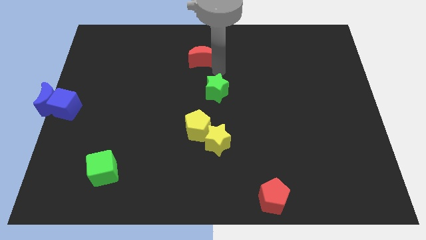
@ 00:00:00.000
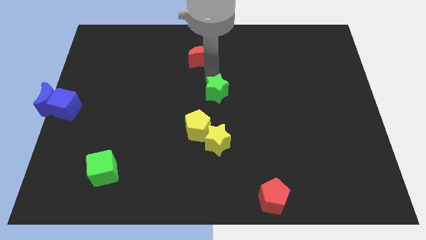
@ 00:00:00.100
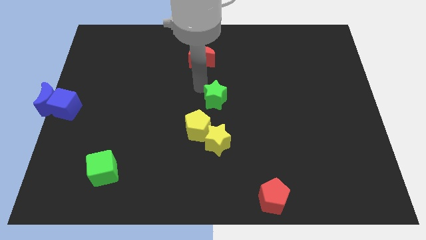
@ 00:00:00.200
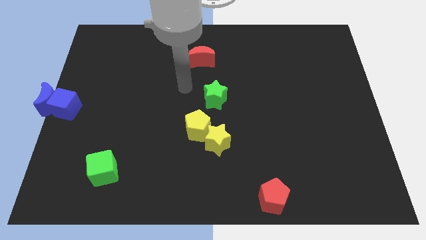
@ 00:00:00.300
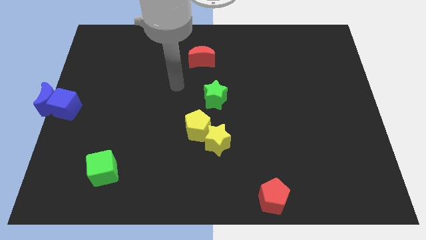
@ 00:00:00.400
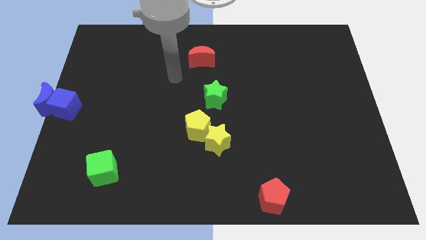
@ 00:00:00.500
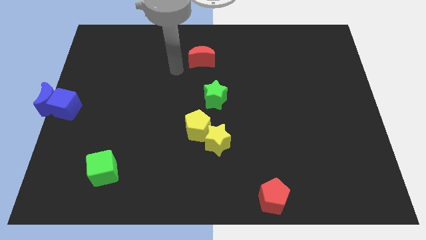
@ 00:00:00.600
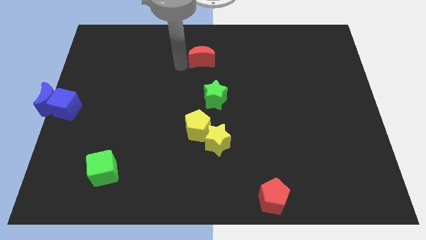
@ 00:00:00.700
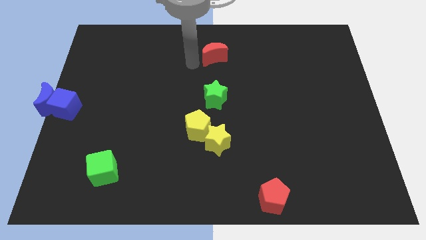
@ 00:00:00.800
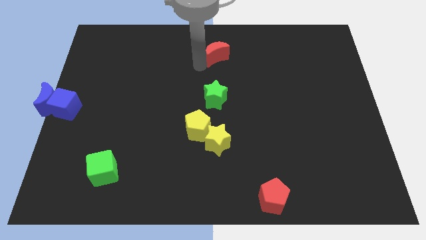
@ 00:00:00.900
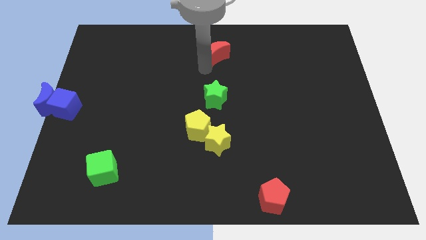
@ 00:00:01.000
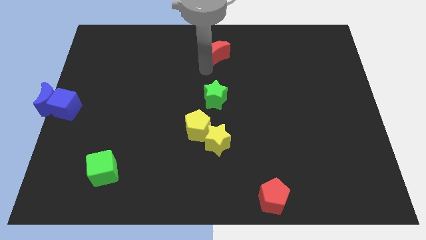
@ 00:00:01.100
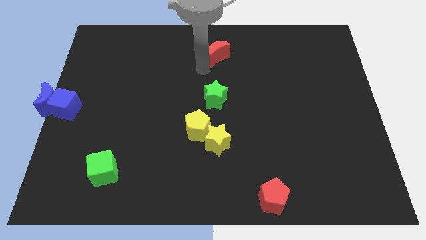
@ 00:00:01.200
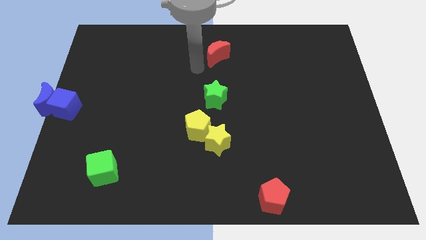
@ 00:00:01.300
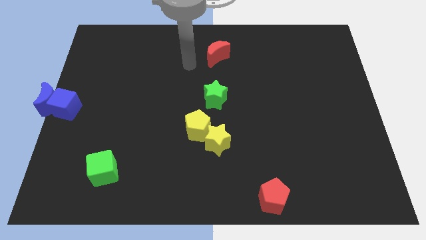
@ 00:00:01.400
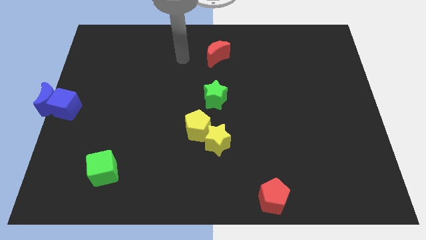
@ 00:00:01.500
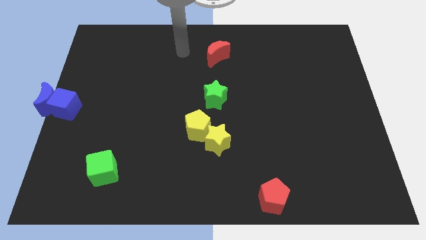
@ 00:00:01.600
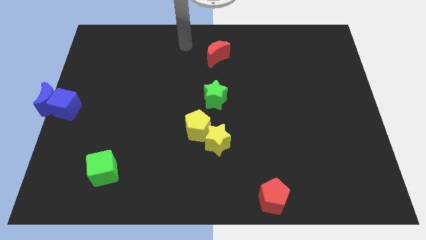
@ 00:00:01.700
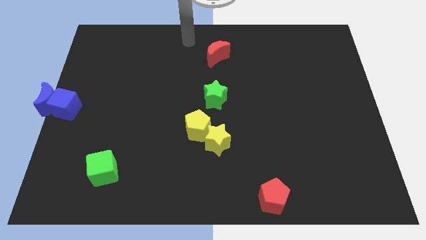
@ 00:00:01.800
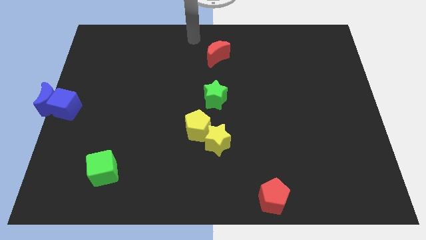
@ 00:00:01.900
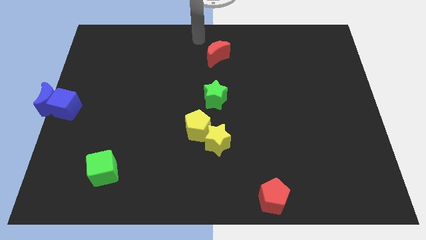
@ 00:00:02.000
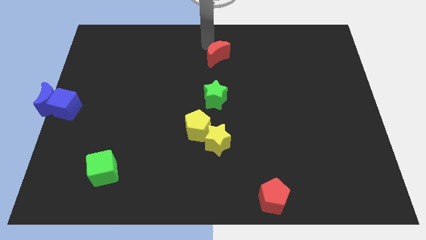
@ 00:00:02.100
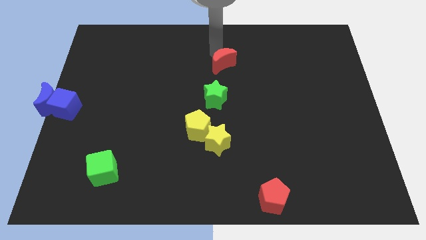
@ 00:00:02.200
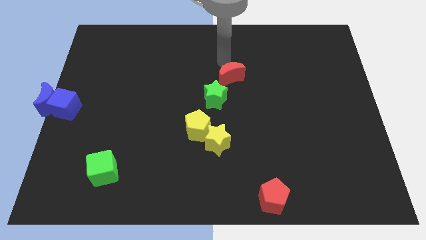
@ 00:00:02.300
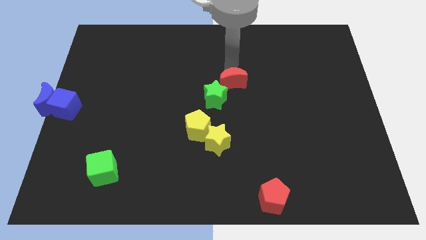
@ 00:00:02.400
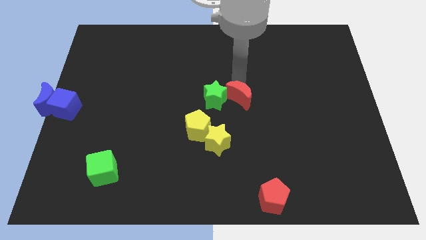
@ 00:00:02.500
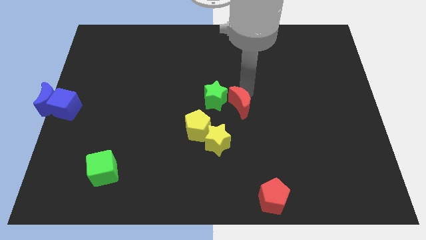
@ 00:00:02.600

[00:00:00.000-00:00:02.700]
move the red crescent to the right of the green star

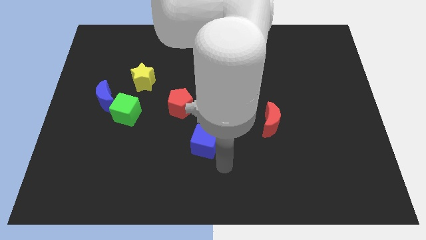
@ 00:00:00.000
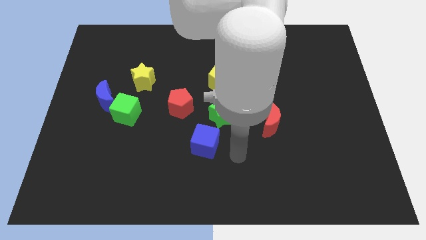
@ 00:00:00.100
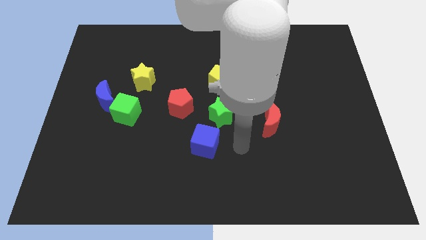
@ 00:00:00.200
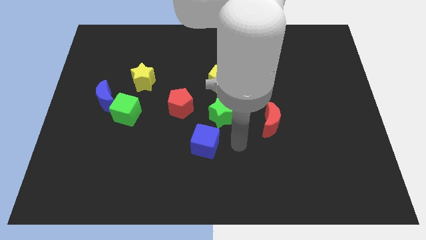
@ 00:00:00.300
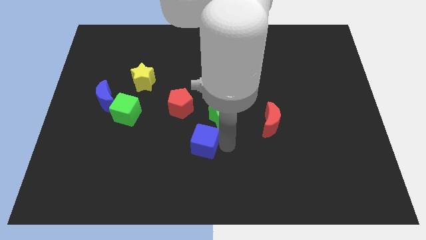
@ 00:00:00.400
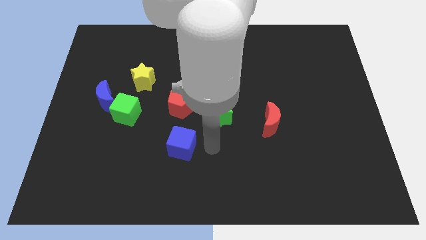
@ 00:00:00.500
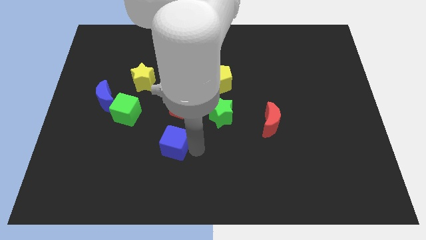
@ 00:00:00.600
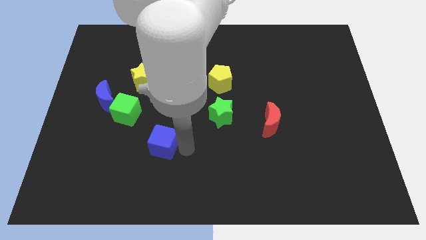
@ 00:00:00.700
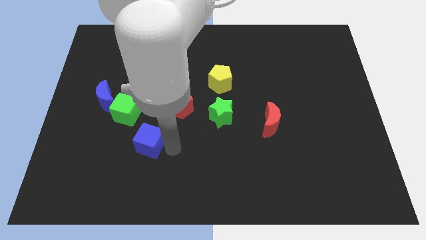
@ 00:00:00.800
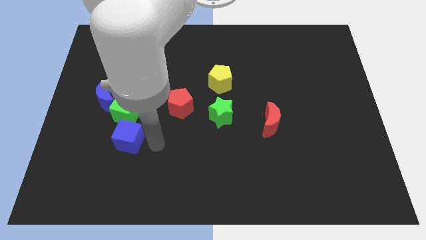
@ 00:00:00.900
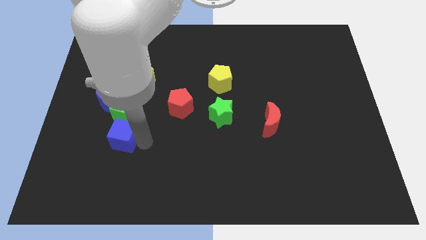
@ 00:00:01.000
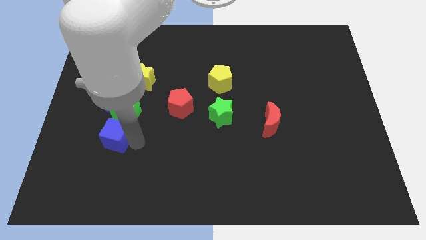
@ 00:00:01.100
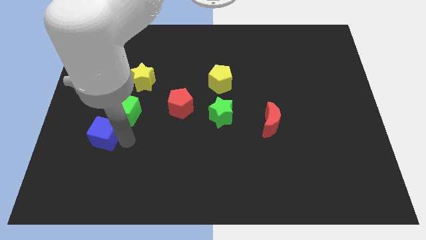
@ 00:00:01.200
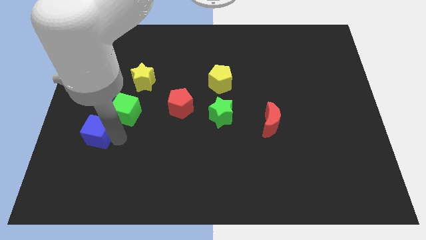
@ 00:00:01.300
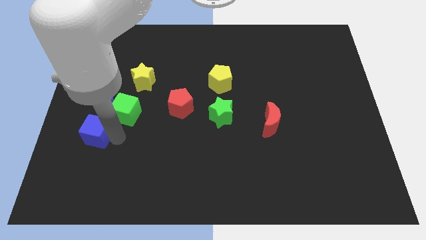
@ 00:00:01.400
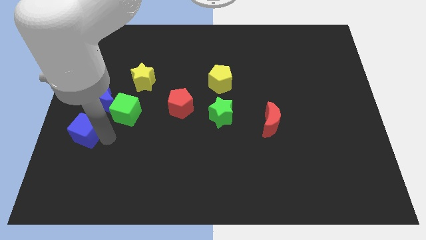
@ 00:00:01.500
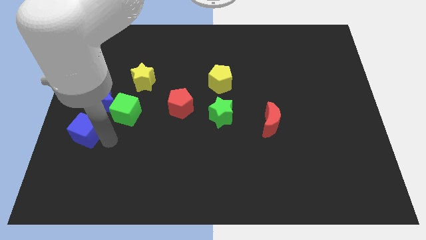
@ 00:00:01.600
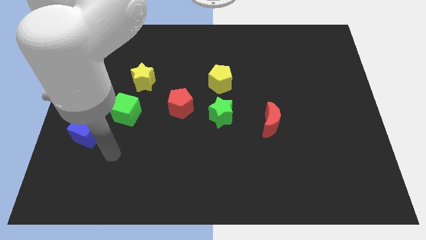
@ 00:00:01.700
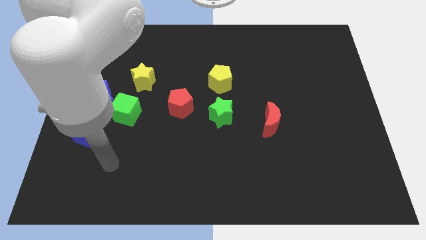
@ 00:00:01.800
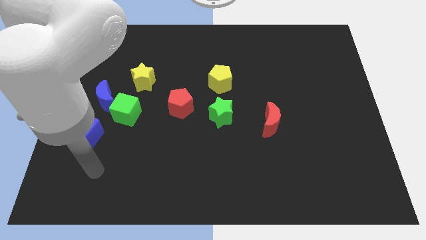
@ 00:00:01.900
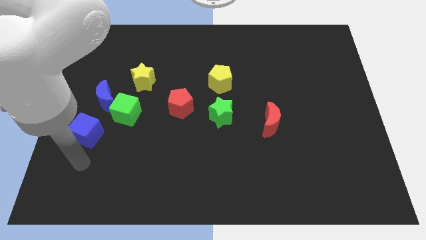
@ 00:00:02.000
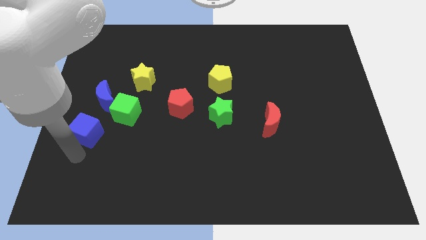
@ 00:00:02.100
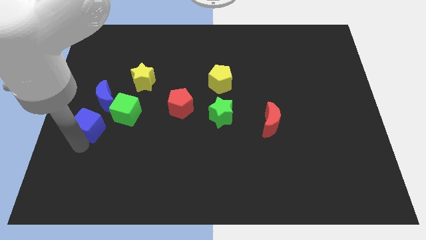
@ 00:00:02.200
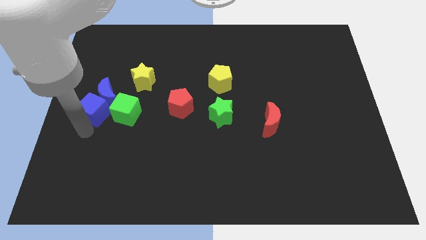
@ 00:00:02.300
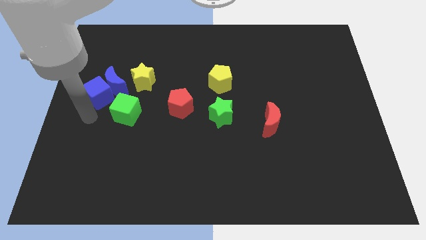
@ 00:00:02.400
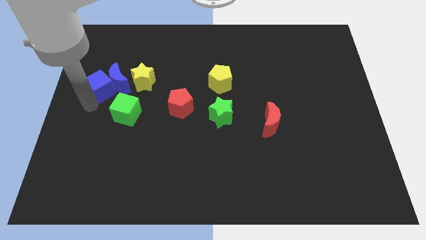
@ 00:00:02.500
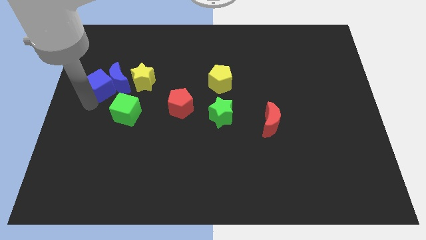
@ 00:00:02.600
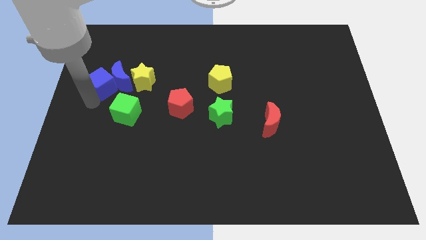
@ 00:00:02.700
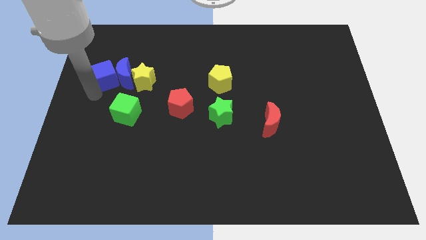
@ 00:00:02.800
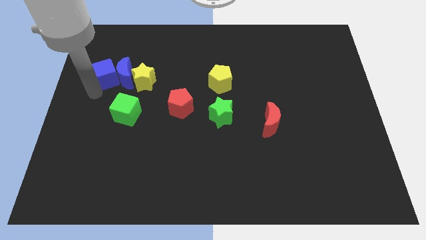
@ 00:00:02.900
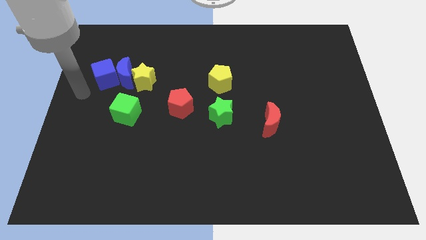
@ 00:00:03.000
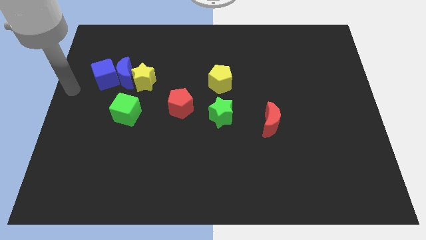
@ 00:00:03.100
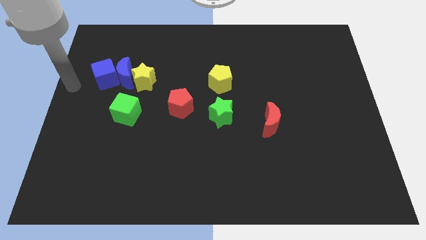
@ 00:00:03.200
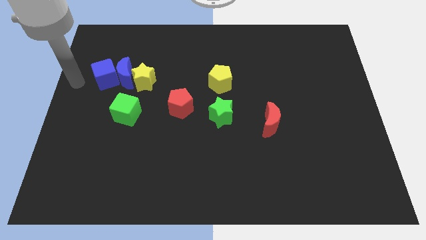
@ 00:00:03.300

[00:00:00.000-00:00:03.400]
push the blue cube along with blue crescent into the yellow star

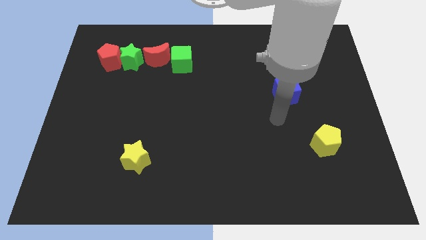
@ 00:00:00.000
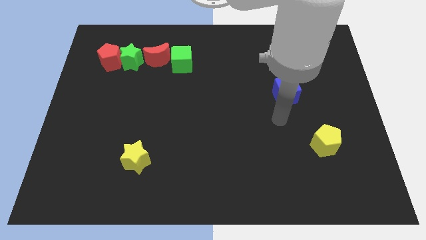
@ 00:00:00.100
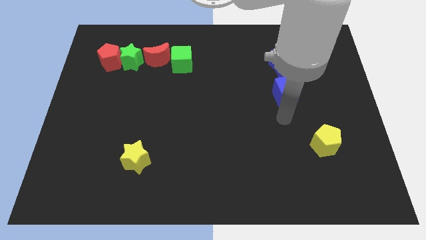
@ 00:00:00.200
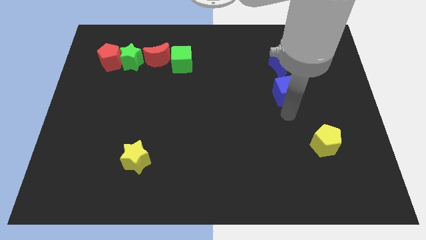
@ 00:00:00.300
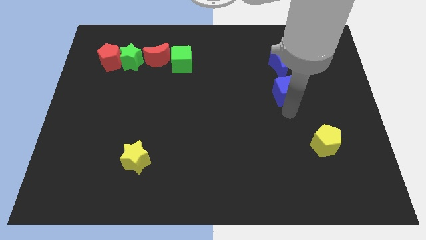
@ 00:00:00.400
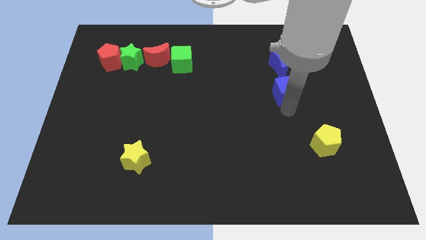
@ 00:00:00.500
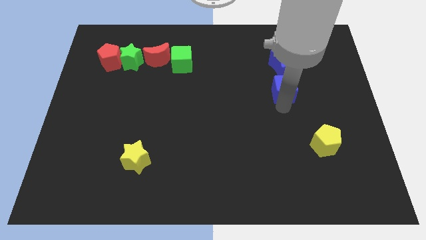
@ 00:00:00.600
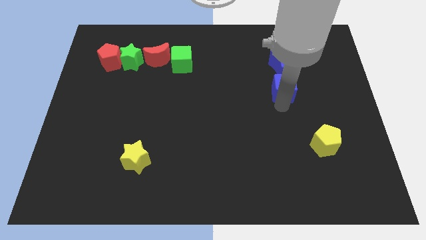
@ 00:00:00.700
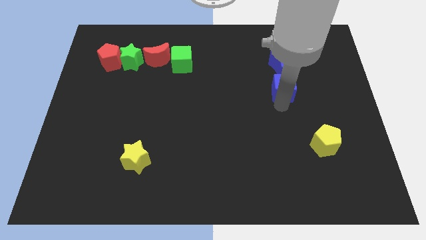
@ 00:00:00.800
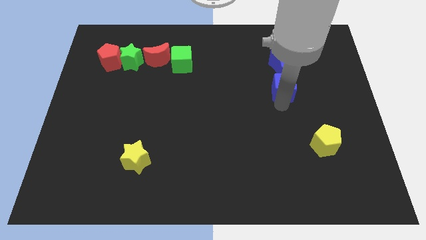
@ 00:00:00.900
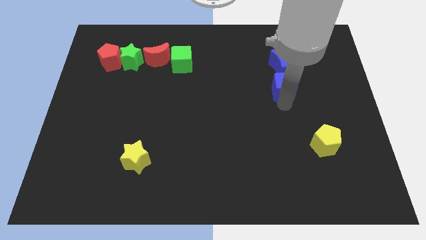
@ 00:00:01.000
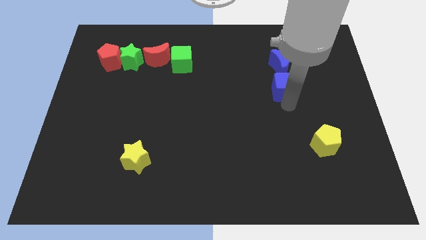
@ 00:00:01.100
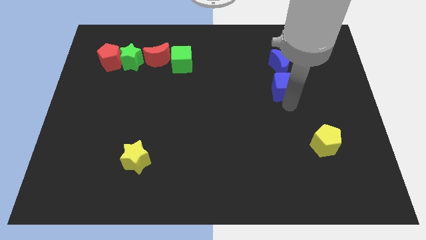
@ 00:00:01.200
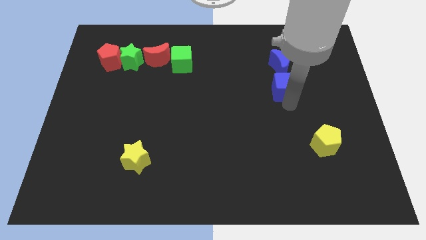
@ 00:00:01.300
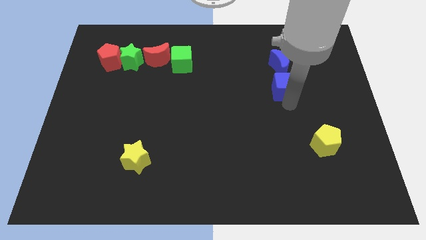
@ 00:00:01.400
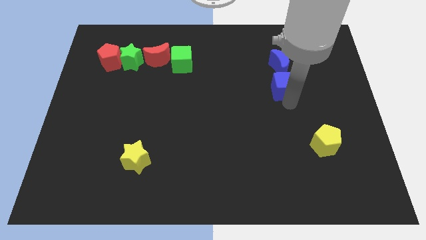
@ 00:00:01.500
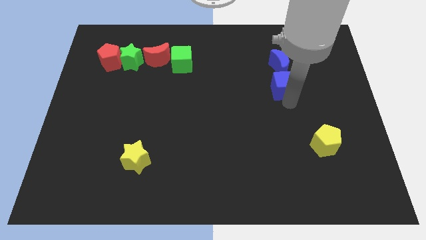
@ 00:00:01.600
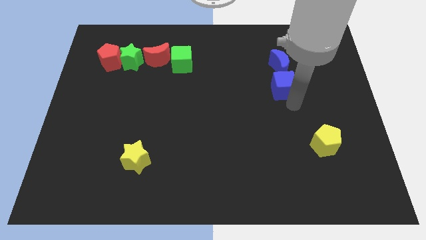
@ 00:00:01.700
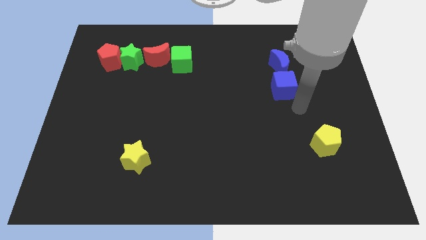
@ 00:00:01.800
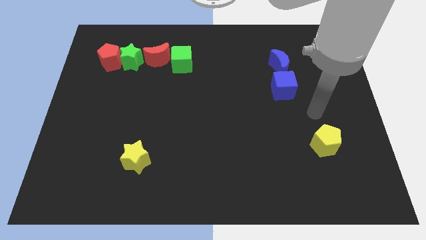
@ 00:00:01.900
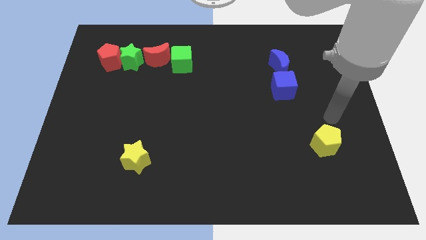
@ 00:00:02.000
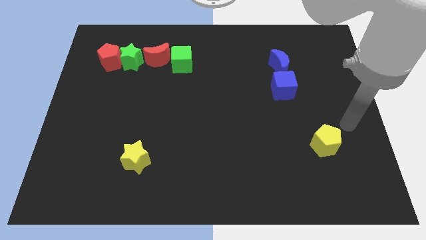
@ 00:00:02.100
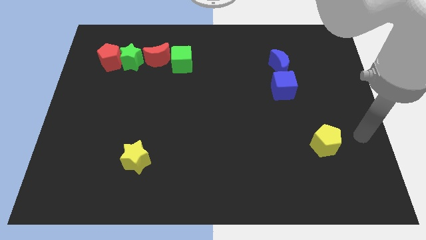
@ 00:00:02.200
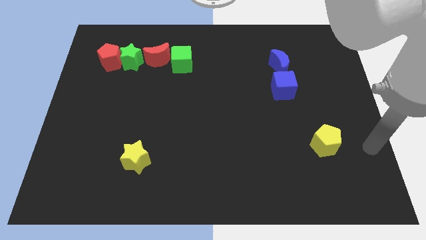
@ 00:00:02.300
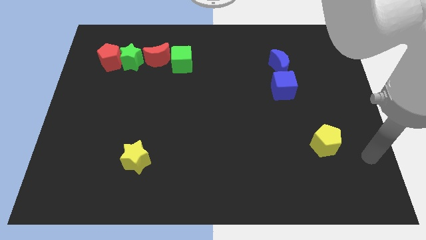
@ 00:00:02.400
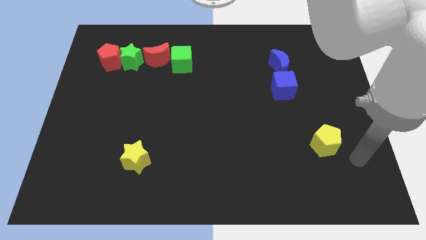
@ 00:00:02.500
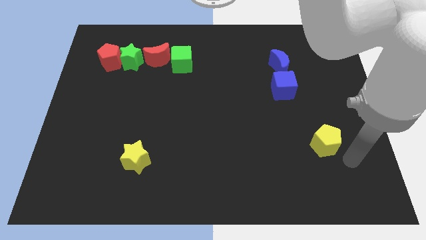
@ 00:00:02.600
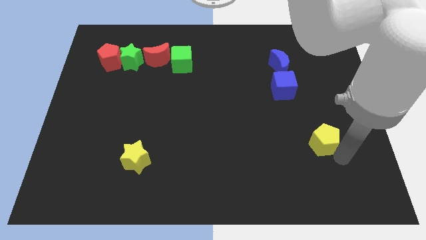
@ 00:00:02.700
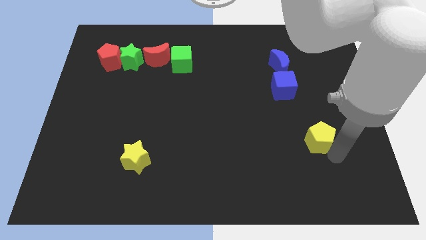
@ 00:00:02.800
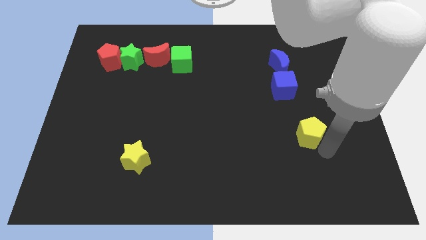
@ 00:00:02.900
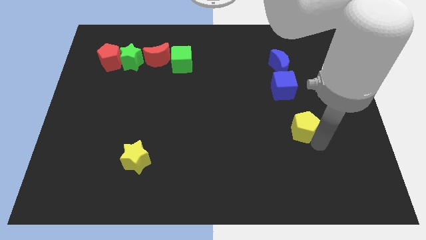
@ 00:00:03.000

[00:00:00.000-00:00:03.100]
slightly move yellow pentagon
